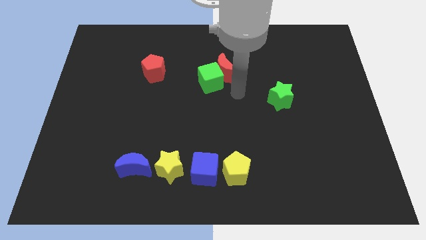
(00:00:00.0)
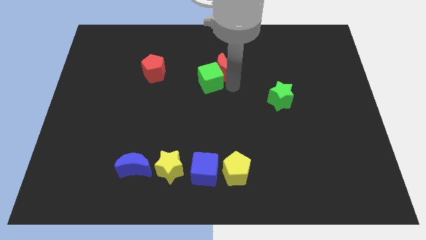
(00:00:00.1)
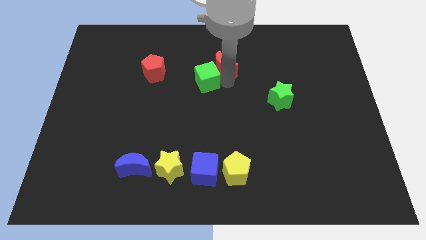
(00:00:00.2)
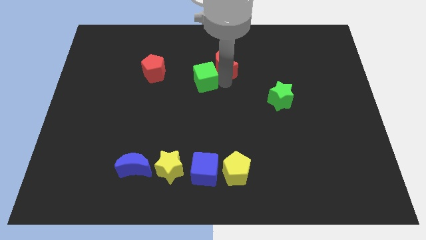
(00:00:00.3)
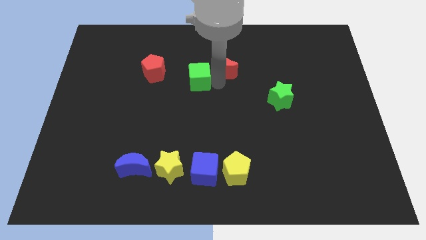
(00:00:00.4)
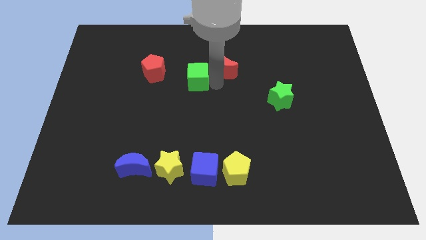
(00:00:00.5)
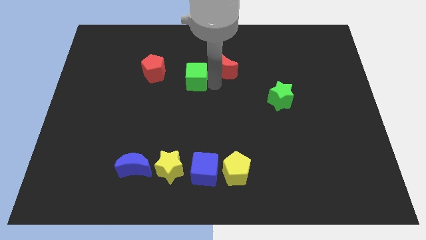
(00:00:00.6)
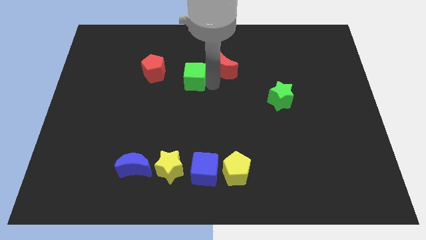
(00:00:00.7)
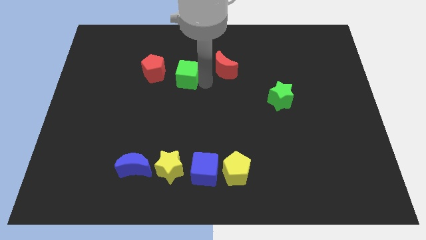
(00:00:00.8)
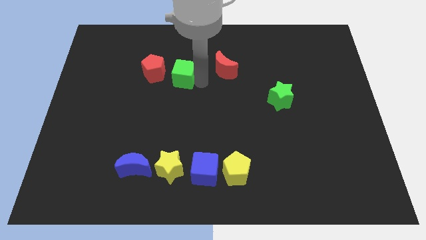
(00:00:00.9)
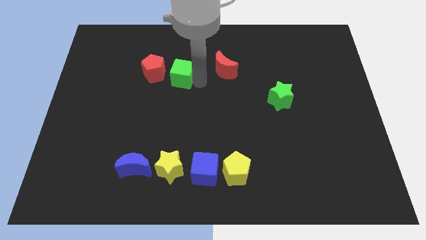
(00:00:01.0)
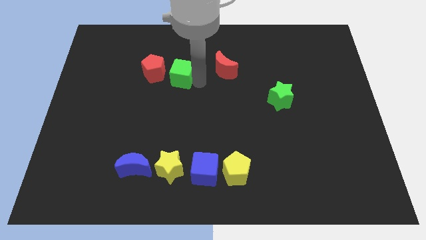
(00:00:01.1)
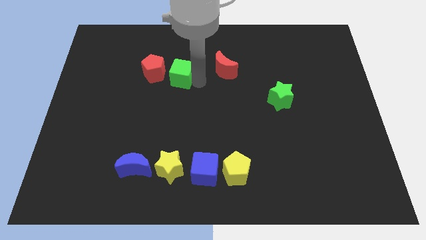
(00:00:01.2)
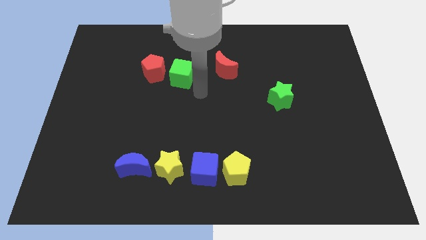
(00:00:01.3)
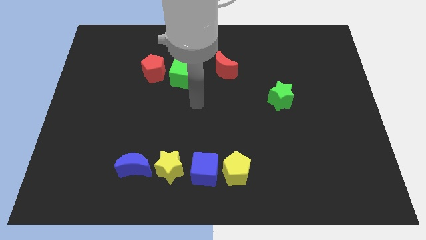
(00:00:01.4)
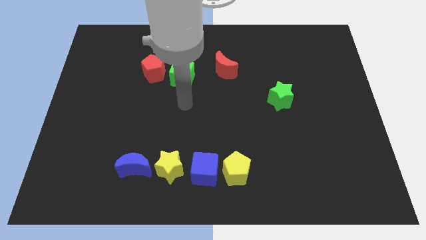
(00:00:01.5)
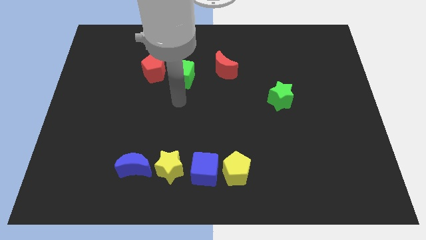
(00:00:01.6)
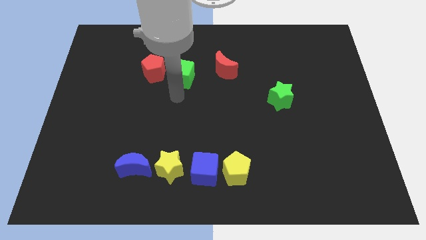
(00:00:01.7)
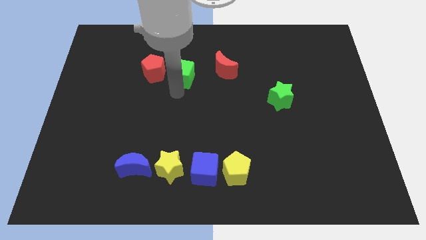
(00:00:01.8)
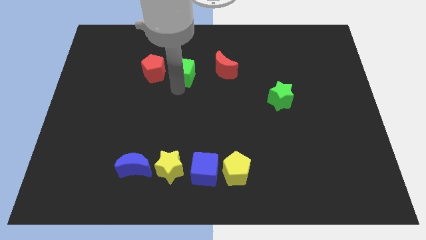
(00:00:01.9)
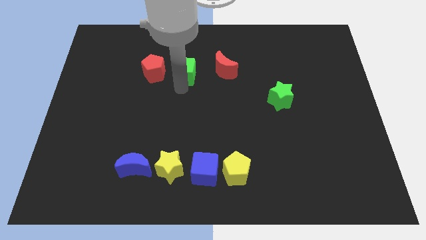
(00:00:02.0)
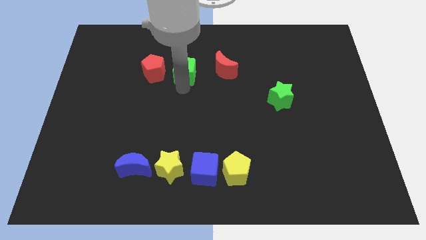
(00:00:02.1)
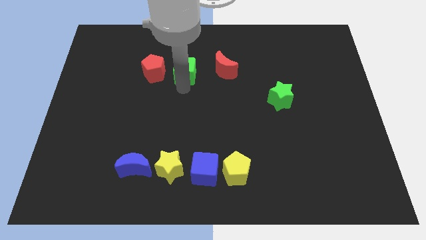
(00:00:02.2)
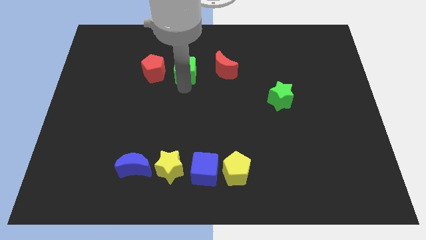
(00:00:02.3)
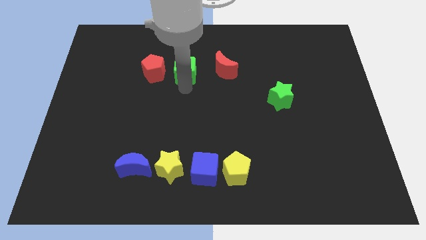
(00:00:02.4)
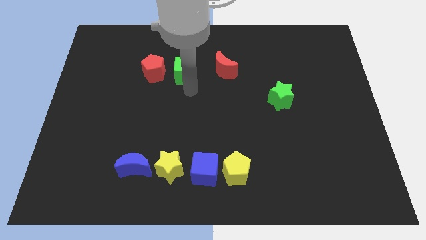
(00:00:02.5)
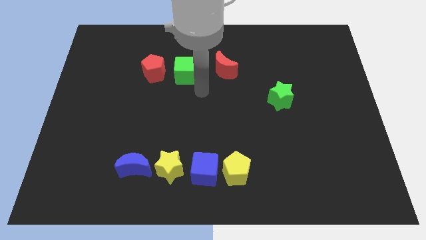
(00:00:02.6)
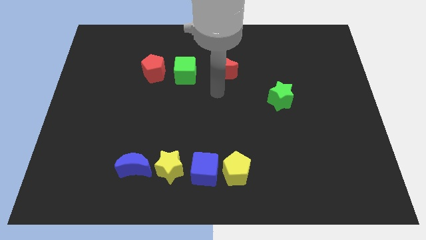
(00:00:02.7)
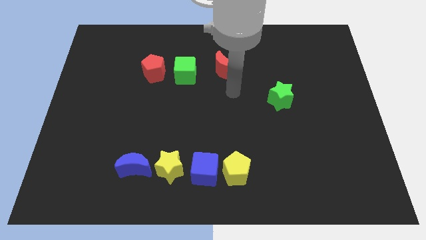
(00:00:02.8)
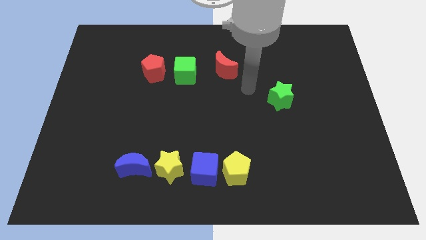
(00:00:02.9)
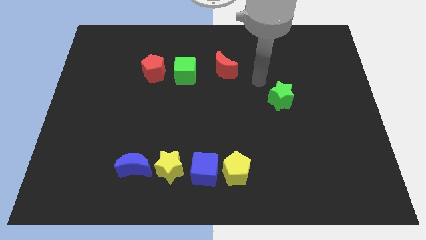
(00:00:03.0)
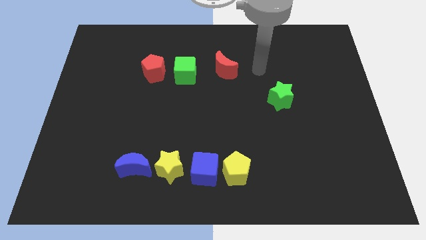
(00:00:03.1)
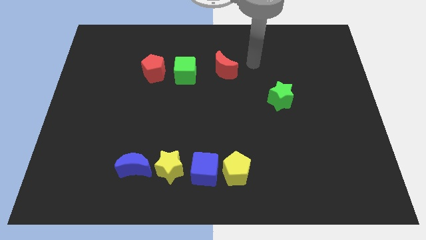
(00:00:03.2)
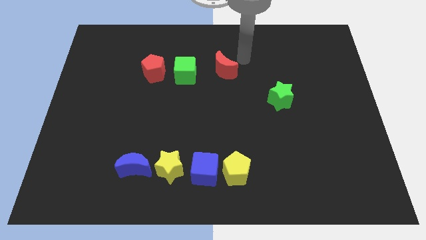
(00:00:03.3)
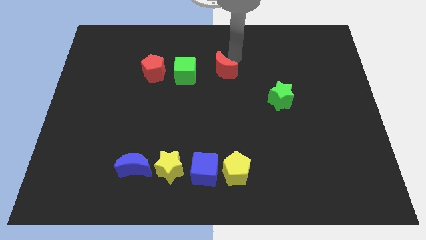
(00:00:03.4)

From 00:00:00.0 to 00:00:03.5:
move the green cube in between the red crescent and red pentagon

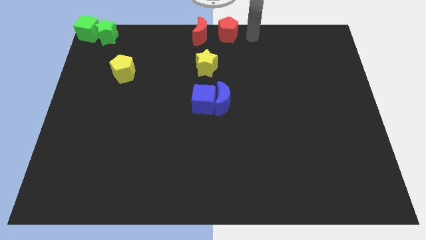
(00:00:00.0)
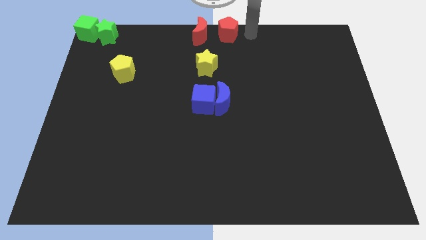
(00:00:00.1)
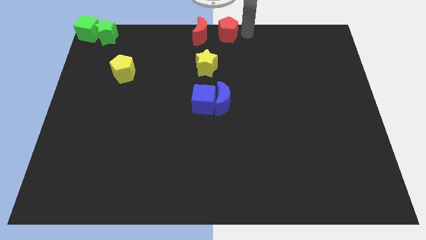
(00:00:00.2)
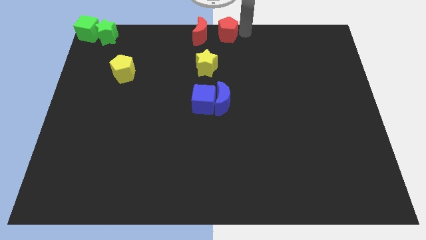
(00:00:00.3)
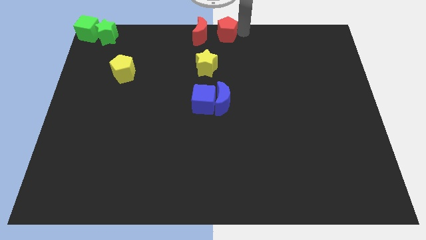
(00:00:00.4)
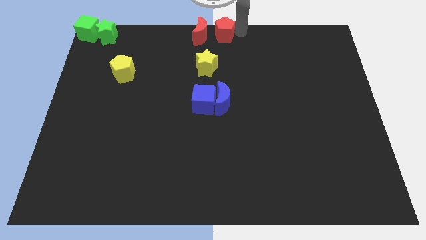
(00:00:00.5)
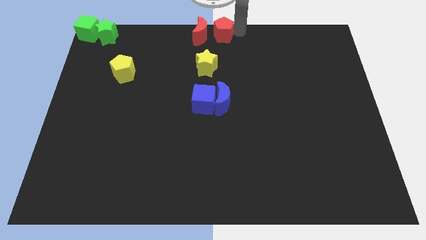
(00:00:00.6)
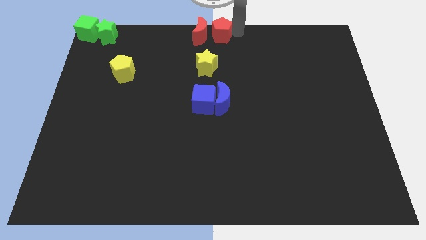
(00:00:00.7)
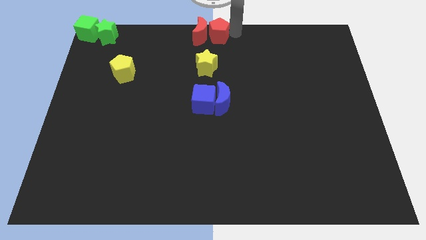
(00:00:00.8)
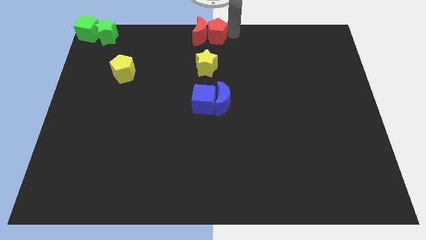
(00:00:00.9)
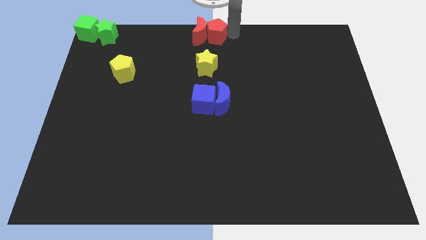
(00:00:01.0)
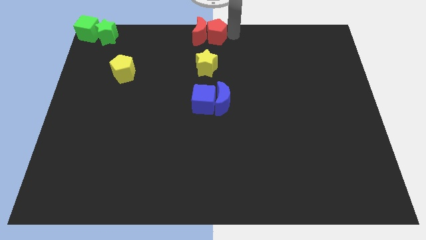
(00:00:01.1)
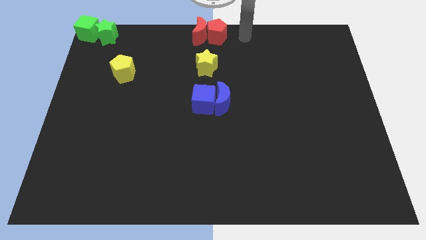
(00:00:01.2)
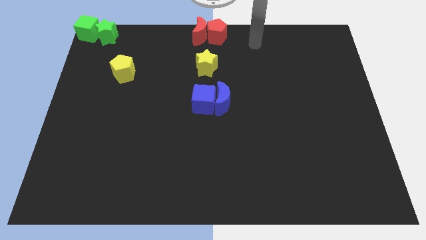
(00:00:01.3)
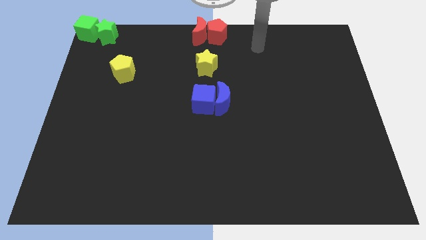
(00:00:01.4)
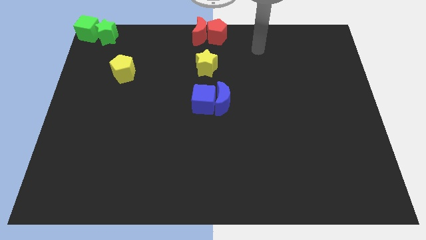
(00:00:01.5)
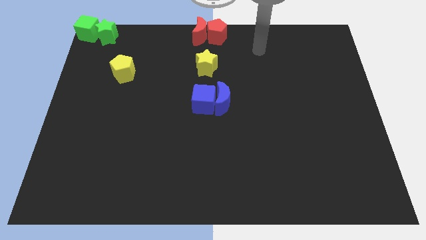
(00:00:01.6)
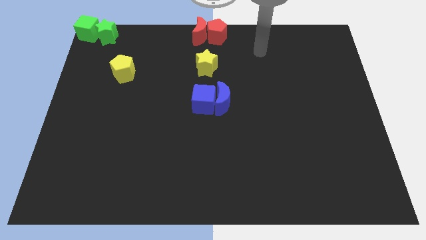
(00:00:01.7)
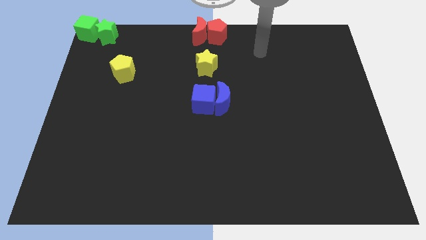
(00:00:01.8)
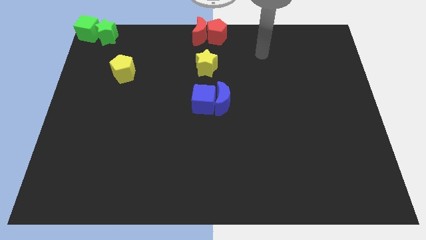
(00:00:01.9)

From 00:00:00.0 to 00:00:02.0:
push the red pentagon into the red crescent

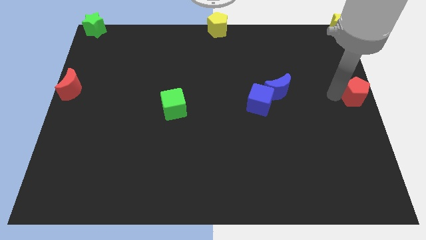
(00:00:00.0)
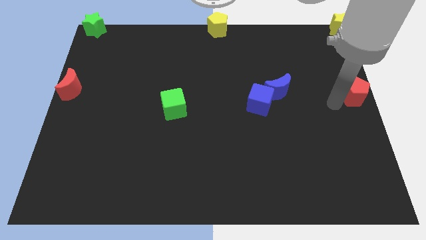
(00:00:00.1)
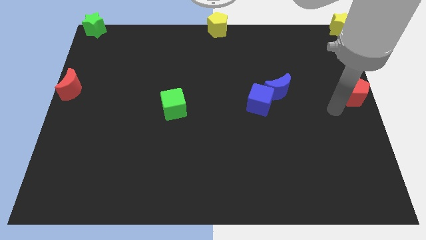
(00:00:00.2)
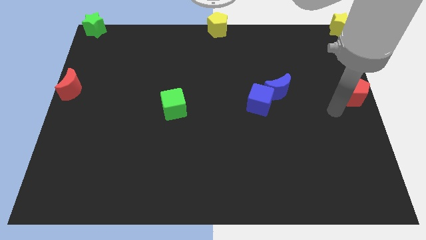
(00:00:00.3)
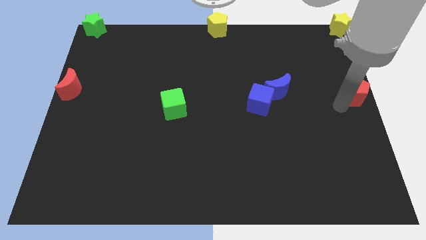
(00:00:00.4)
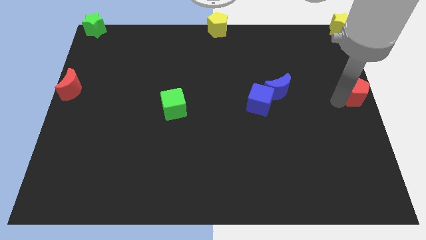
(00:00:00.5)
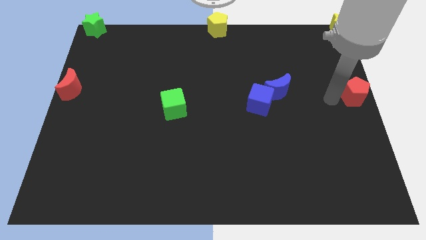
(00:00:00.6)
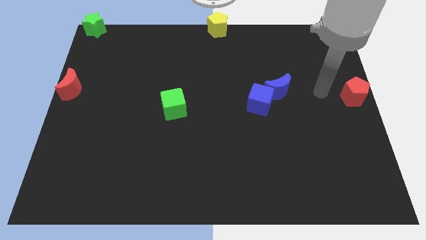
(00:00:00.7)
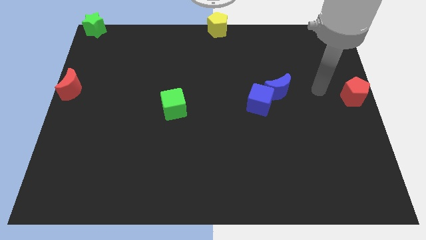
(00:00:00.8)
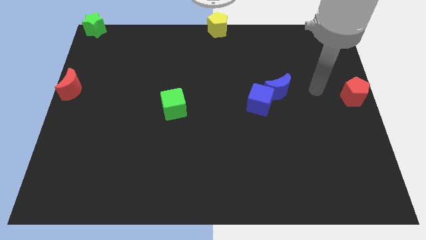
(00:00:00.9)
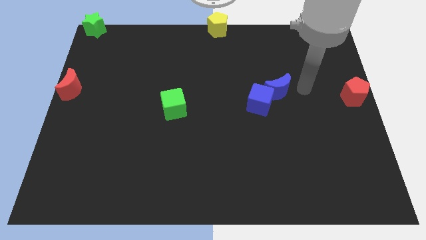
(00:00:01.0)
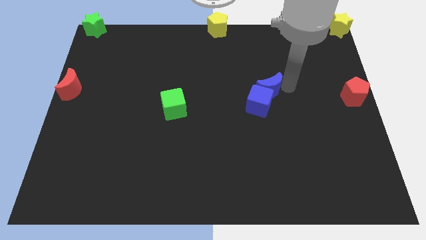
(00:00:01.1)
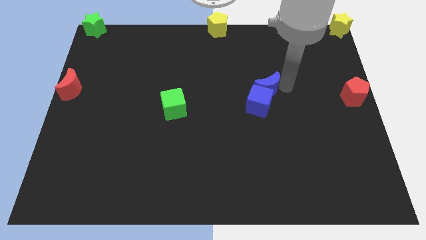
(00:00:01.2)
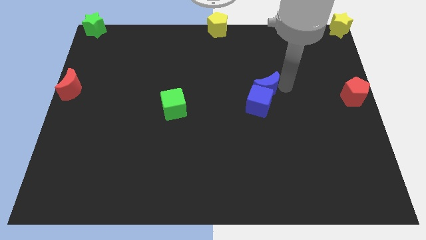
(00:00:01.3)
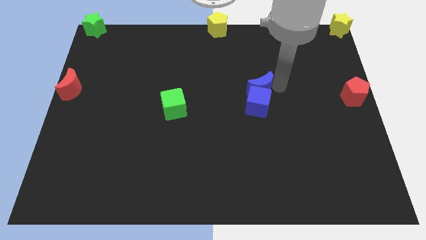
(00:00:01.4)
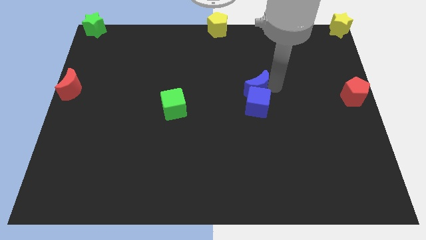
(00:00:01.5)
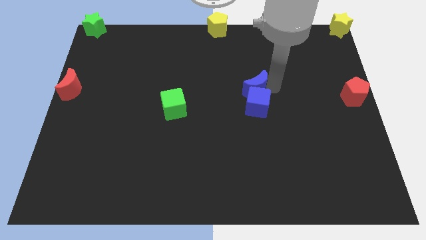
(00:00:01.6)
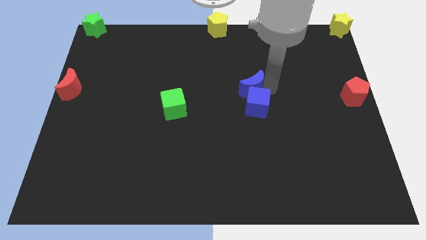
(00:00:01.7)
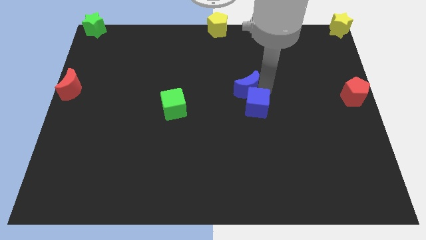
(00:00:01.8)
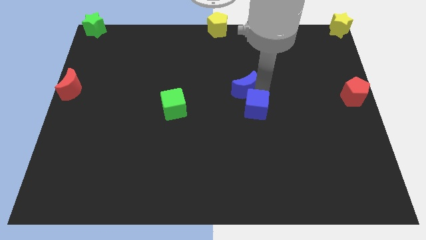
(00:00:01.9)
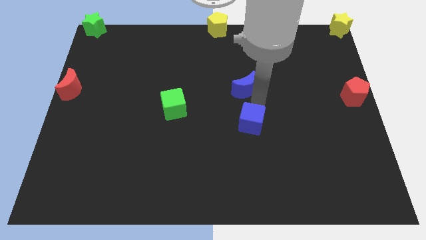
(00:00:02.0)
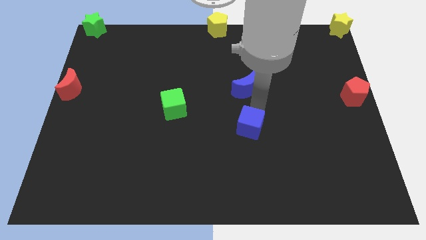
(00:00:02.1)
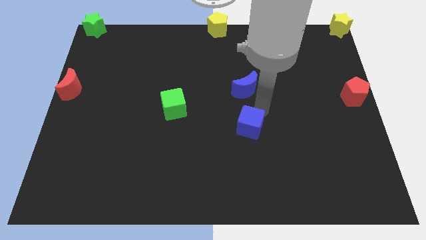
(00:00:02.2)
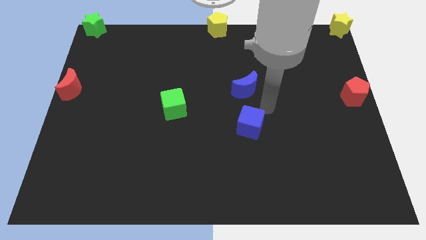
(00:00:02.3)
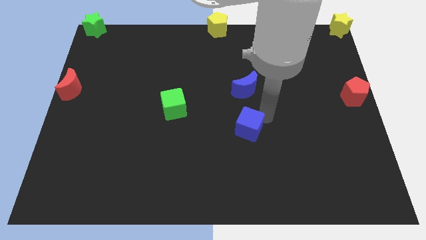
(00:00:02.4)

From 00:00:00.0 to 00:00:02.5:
push the blue cube away from the blue moon

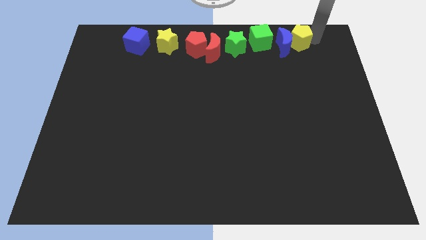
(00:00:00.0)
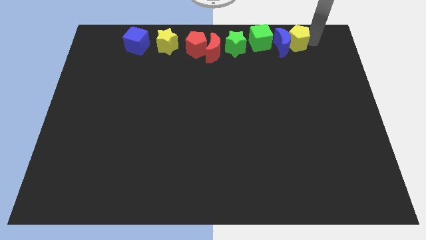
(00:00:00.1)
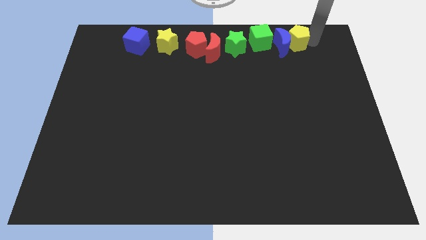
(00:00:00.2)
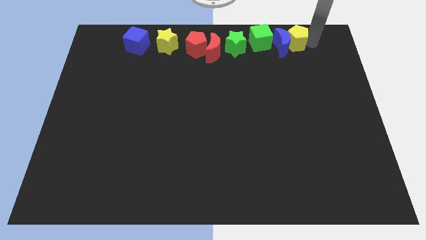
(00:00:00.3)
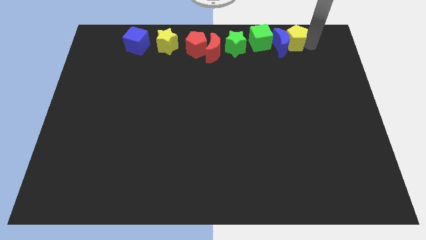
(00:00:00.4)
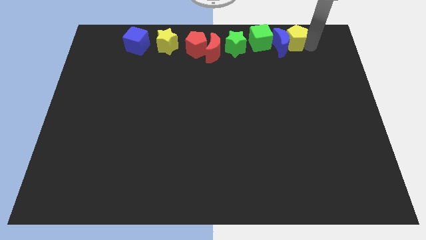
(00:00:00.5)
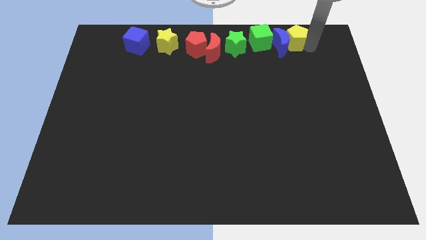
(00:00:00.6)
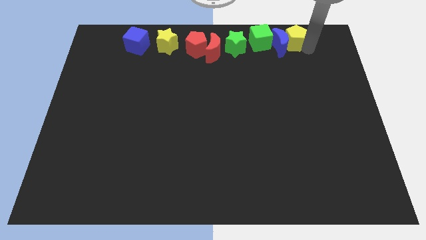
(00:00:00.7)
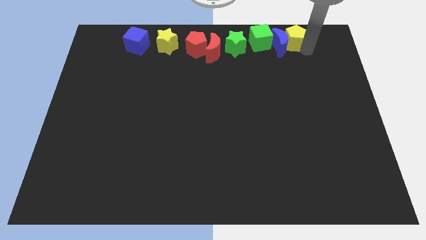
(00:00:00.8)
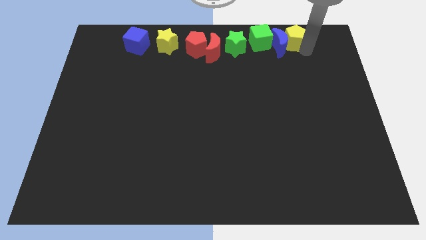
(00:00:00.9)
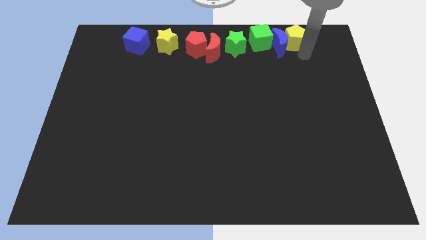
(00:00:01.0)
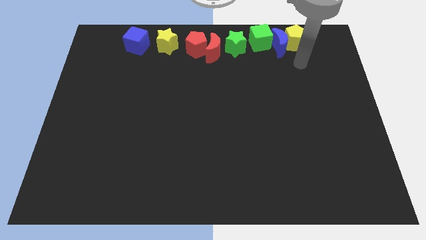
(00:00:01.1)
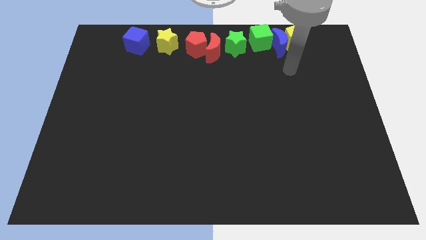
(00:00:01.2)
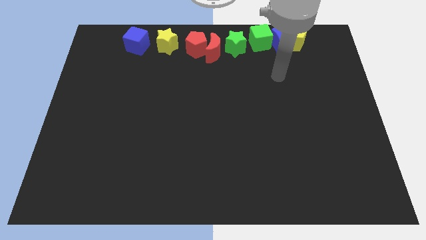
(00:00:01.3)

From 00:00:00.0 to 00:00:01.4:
slightly push the yellow pentagon with blue crescent into the green cube
